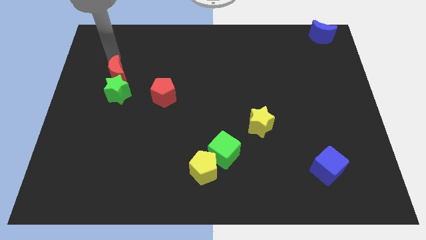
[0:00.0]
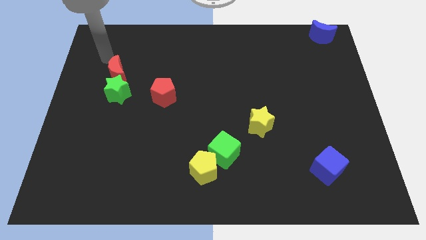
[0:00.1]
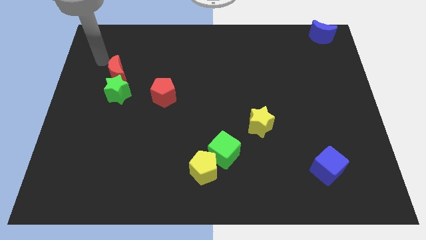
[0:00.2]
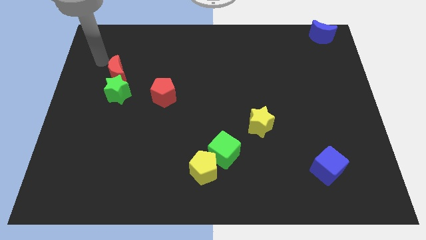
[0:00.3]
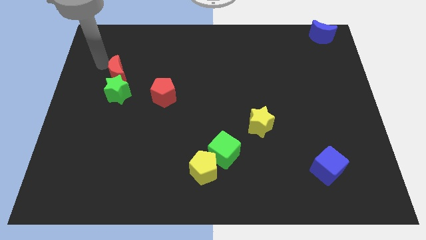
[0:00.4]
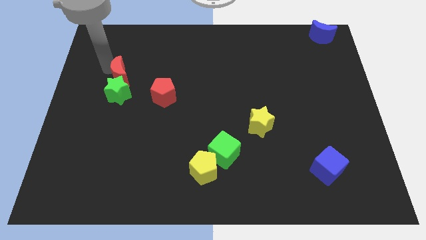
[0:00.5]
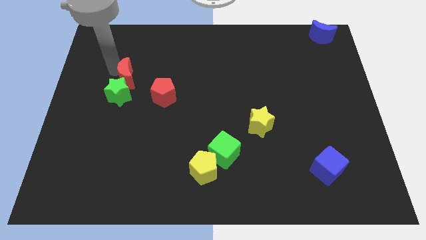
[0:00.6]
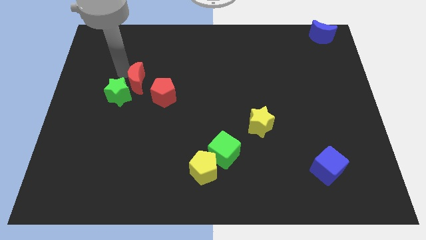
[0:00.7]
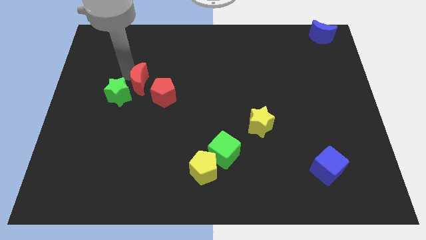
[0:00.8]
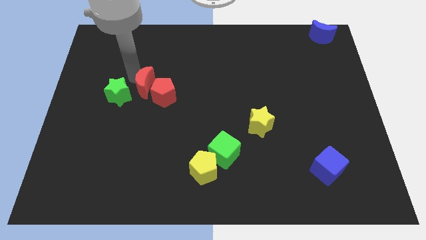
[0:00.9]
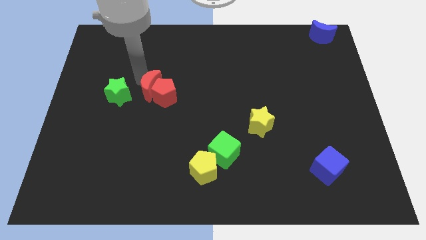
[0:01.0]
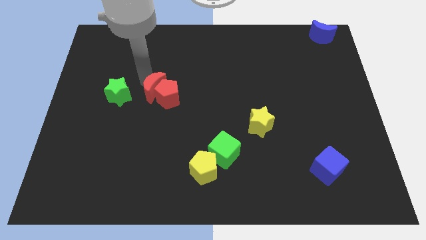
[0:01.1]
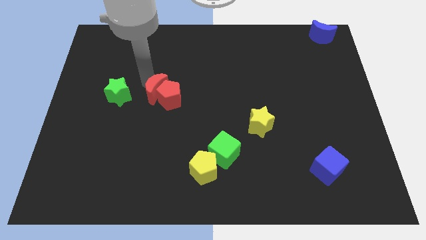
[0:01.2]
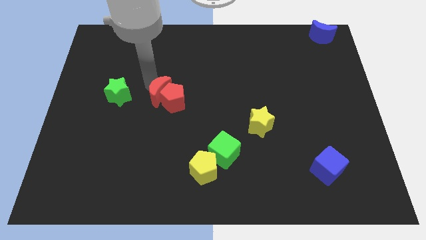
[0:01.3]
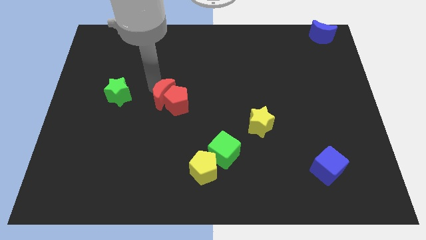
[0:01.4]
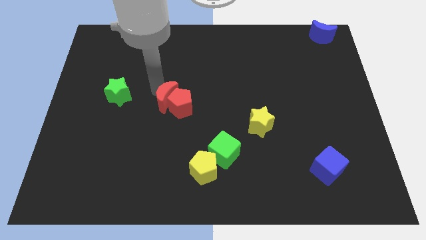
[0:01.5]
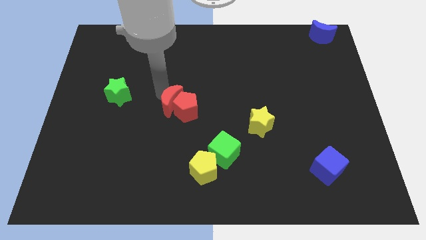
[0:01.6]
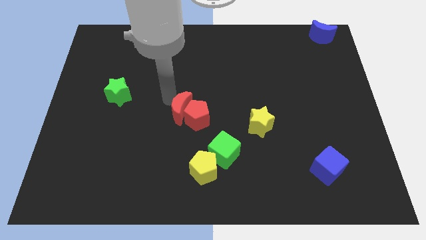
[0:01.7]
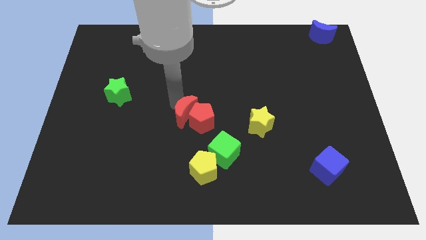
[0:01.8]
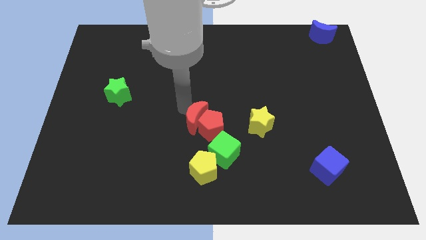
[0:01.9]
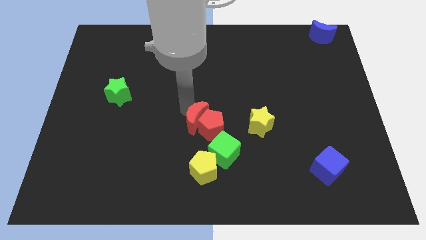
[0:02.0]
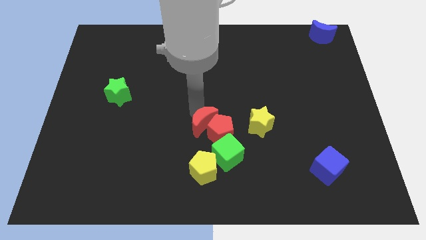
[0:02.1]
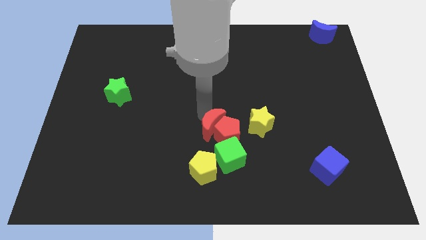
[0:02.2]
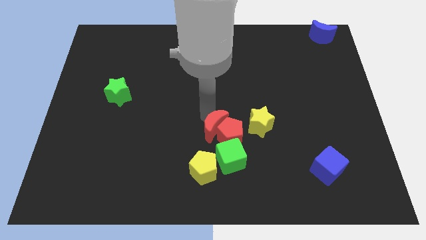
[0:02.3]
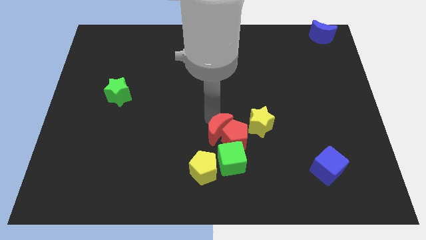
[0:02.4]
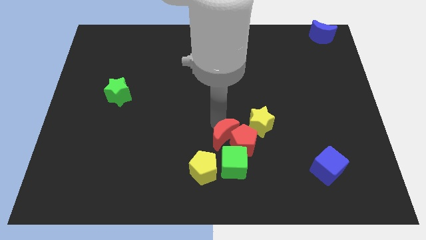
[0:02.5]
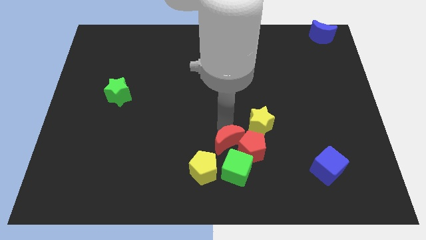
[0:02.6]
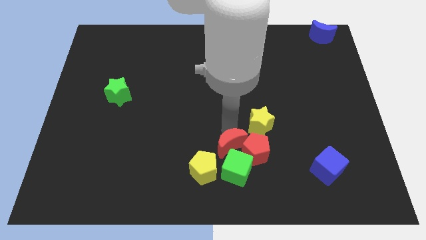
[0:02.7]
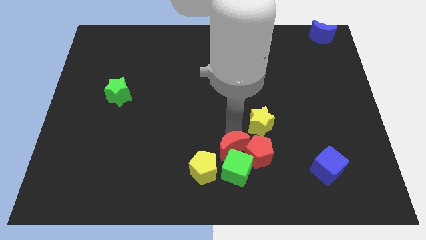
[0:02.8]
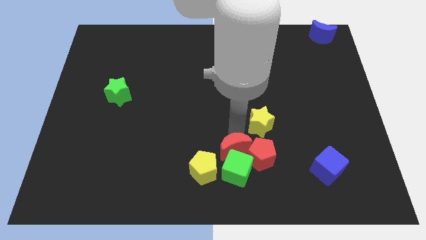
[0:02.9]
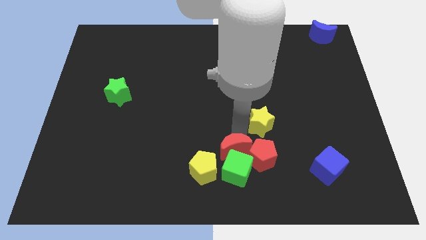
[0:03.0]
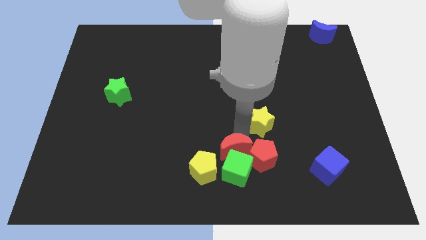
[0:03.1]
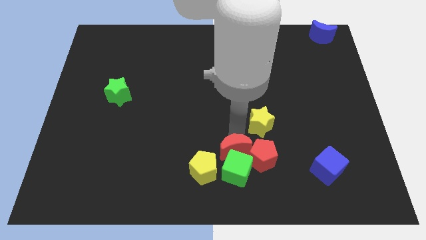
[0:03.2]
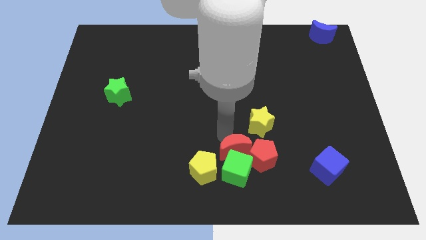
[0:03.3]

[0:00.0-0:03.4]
push the red crescent and red pentagon into the green cube

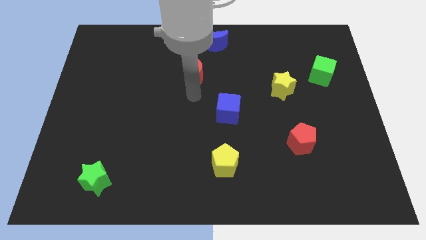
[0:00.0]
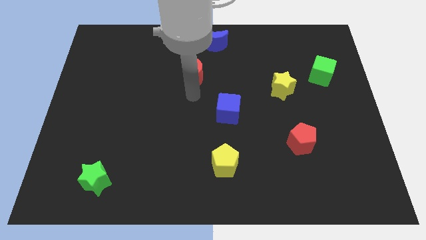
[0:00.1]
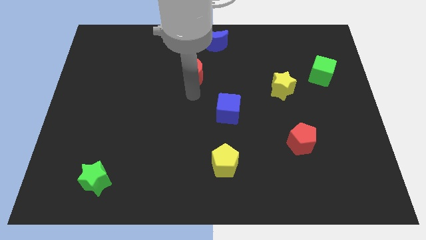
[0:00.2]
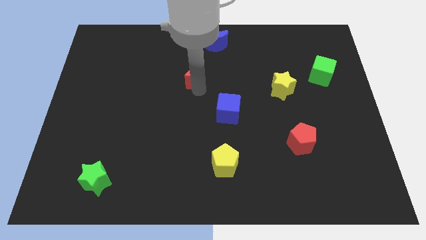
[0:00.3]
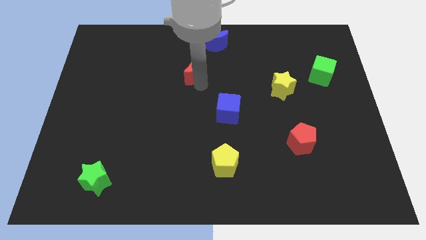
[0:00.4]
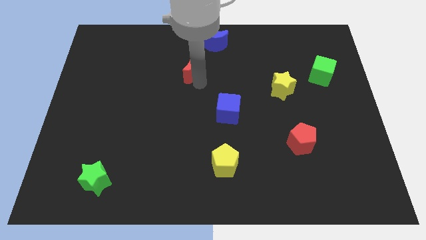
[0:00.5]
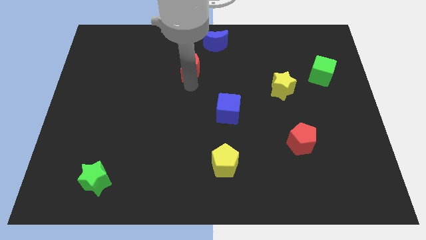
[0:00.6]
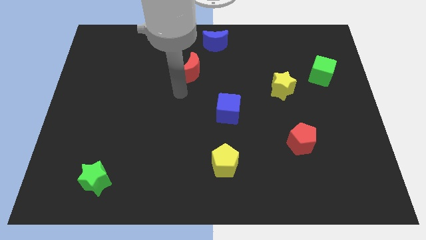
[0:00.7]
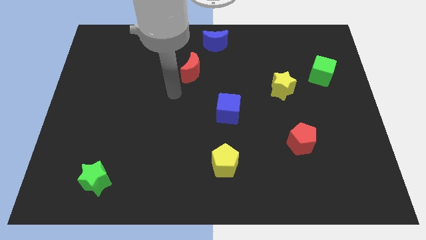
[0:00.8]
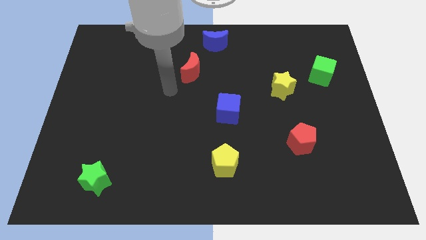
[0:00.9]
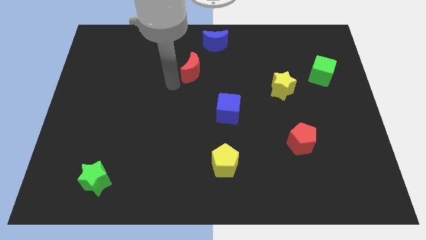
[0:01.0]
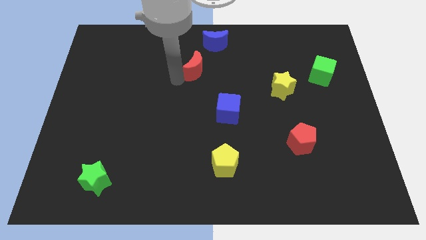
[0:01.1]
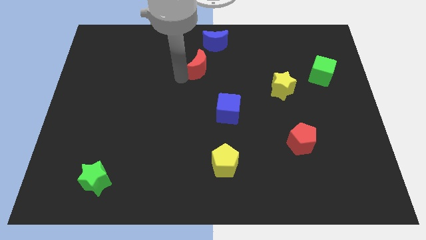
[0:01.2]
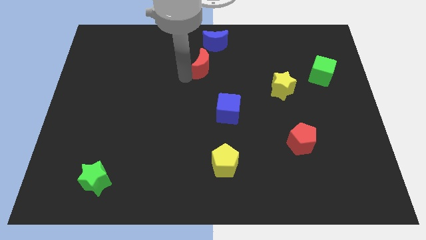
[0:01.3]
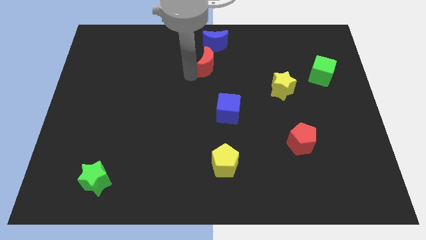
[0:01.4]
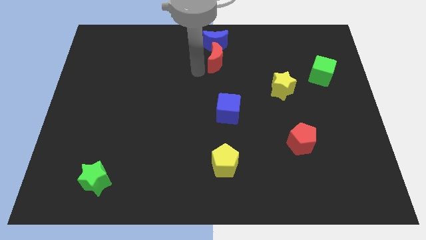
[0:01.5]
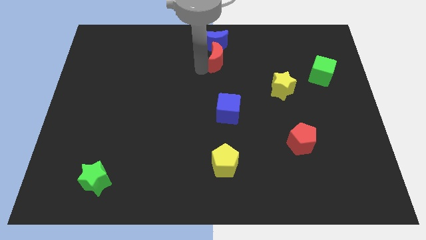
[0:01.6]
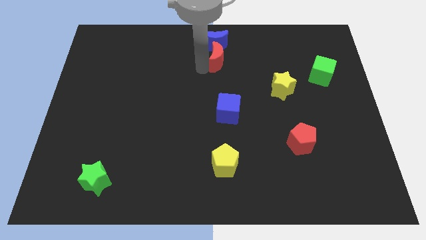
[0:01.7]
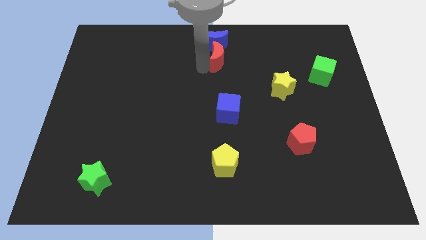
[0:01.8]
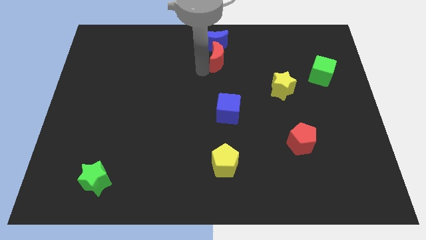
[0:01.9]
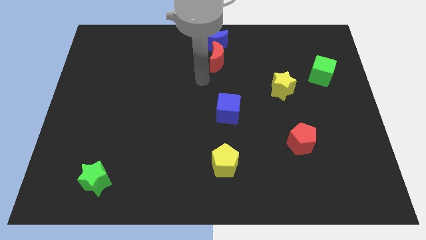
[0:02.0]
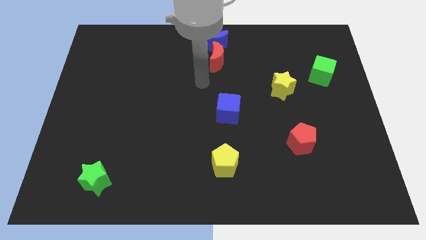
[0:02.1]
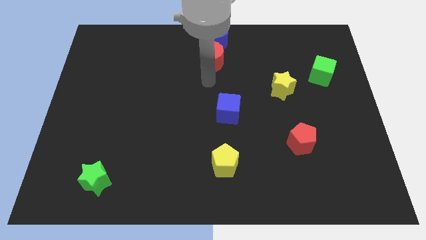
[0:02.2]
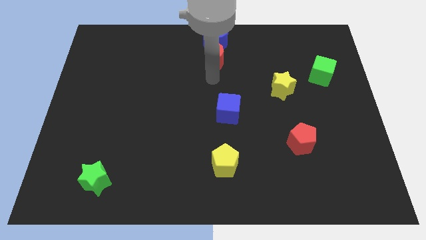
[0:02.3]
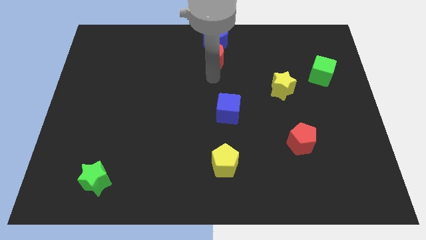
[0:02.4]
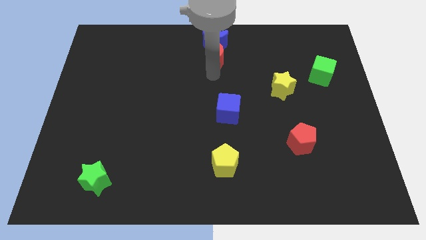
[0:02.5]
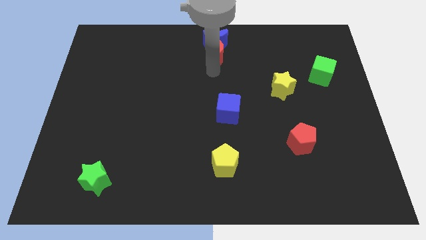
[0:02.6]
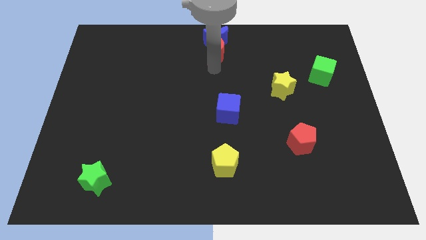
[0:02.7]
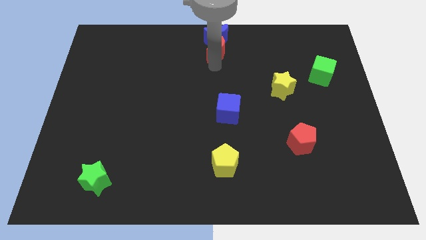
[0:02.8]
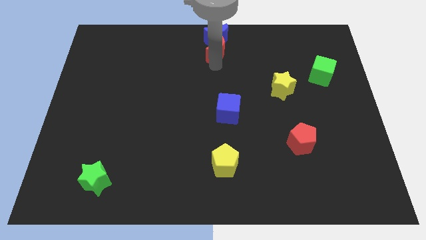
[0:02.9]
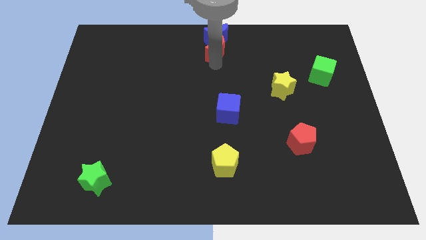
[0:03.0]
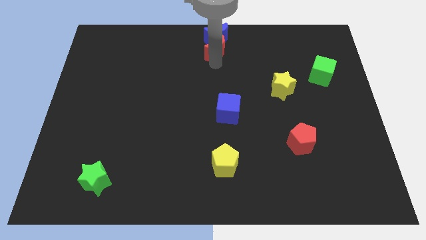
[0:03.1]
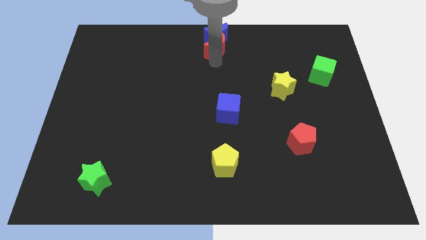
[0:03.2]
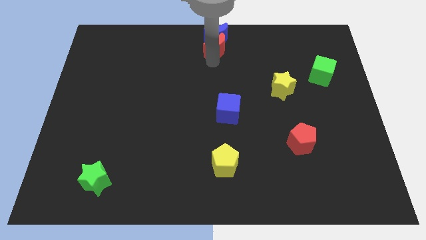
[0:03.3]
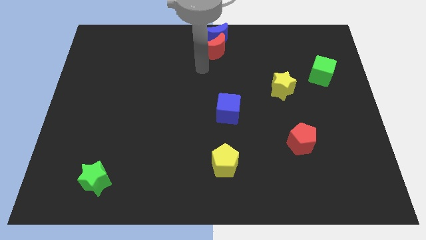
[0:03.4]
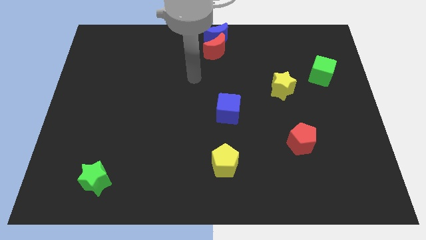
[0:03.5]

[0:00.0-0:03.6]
push the red crescent into the blue moon

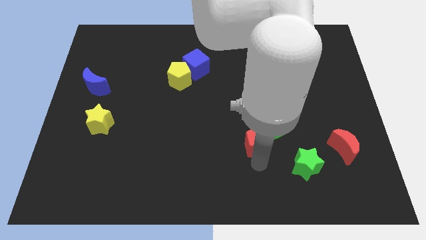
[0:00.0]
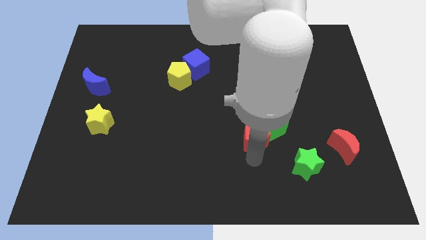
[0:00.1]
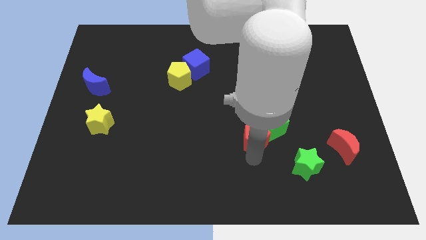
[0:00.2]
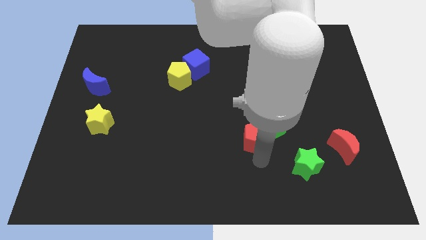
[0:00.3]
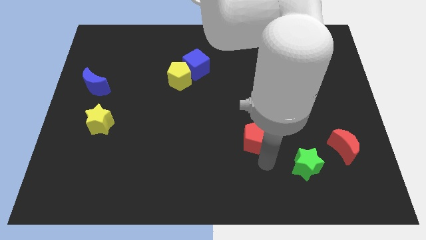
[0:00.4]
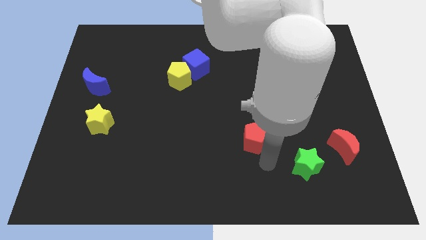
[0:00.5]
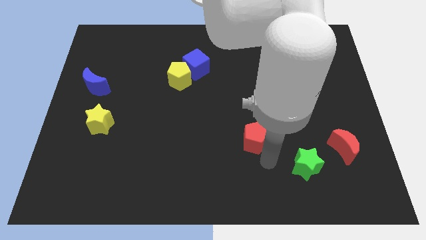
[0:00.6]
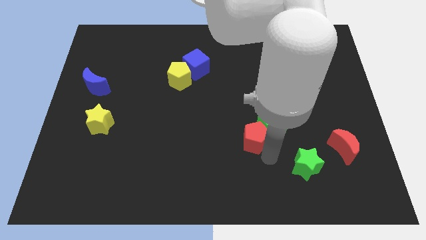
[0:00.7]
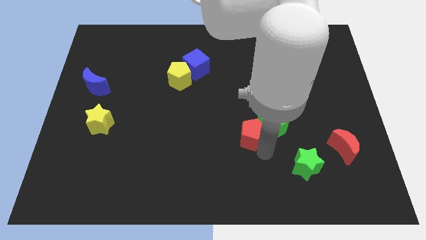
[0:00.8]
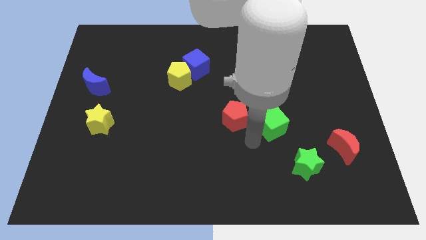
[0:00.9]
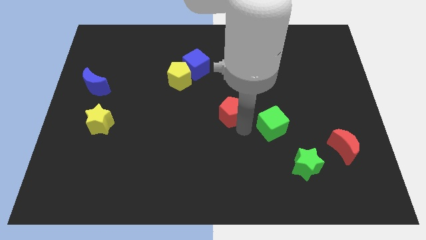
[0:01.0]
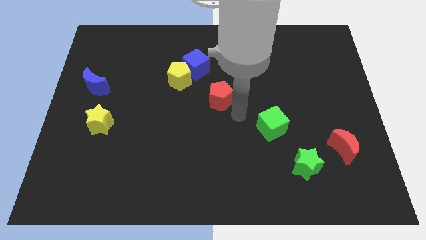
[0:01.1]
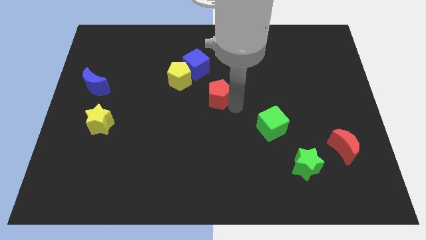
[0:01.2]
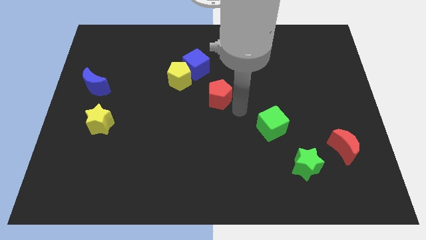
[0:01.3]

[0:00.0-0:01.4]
separate the red pentagon from green cube

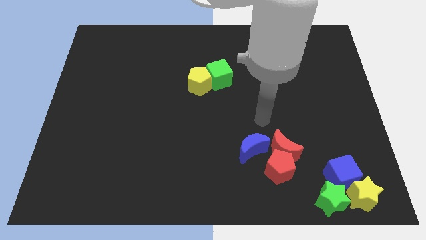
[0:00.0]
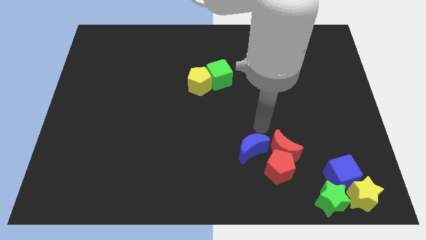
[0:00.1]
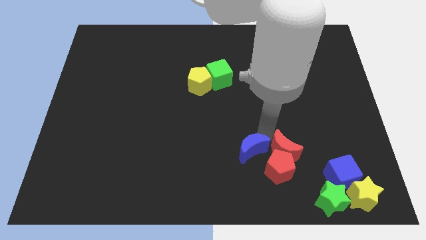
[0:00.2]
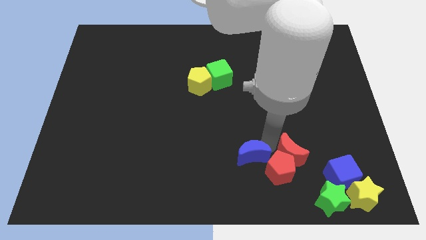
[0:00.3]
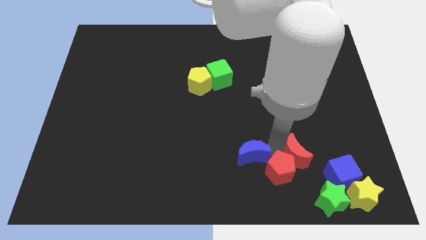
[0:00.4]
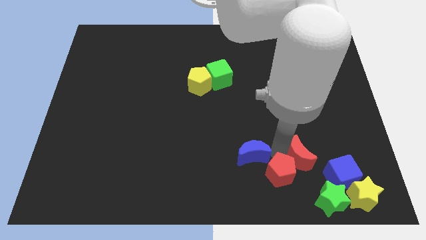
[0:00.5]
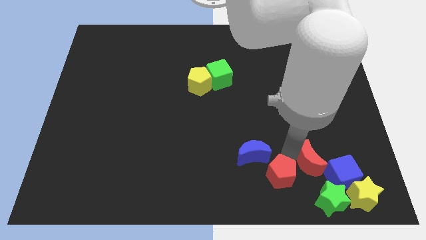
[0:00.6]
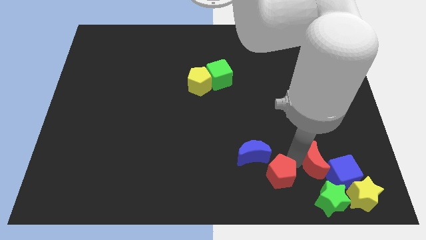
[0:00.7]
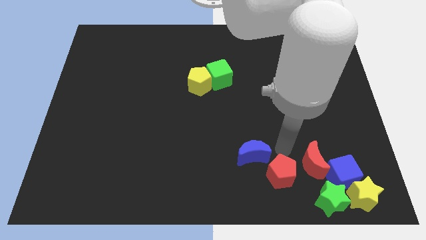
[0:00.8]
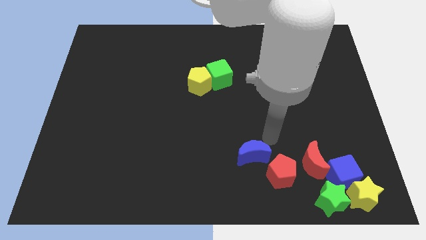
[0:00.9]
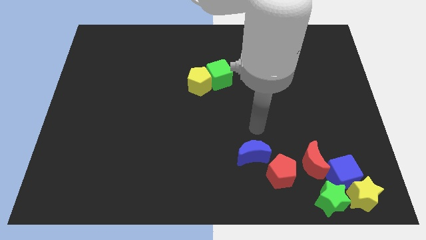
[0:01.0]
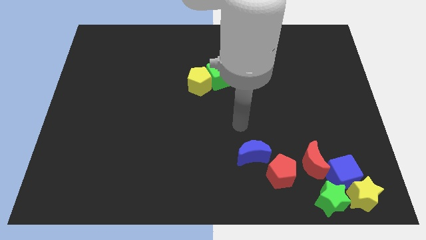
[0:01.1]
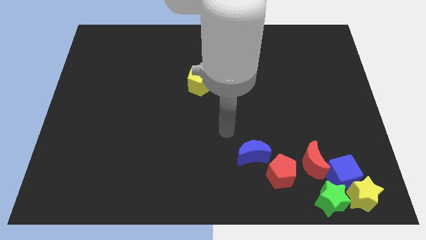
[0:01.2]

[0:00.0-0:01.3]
move the red moon to the left of the blue cube
